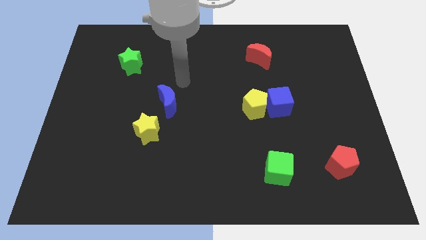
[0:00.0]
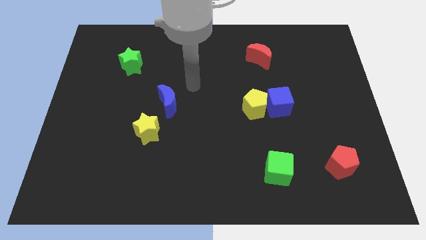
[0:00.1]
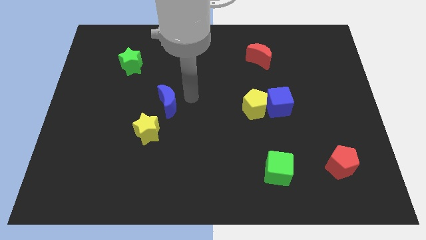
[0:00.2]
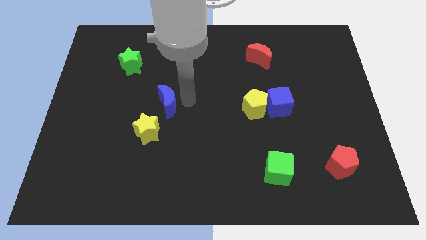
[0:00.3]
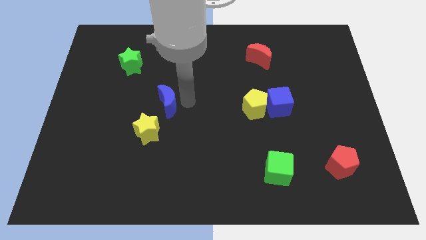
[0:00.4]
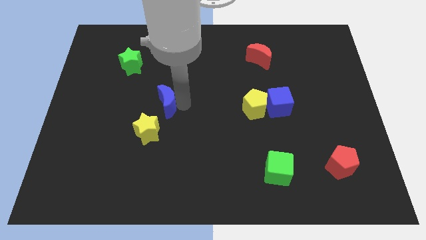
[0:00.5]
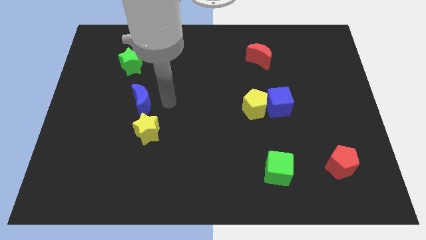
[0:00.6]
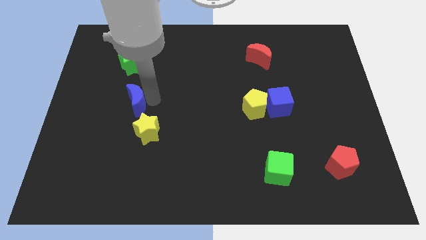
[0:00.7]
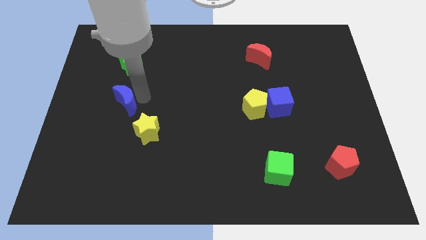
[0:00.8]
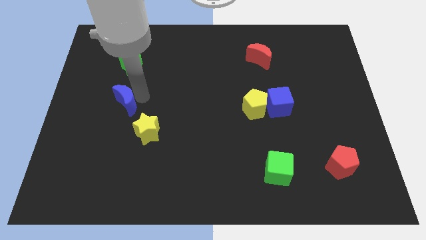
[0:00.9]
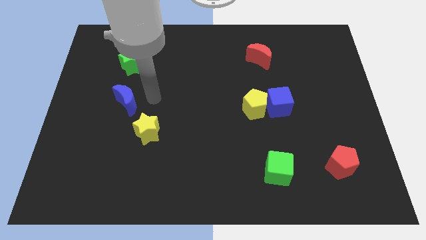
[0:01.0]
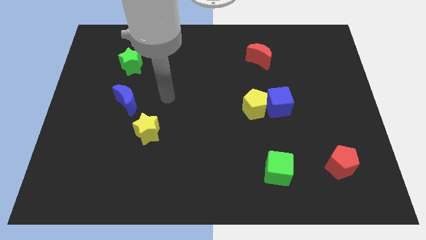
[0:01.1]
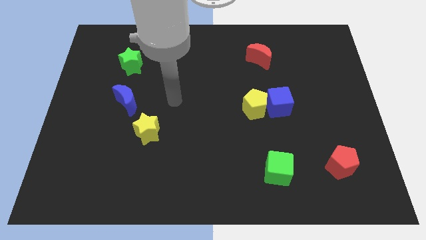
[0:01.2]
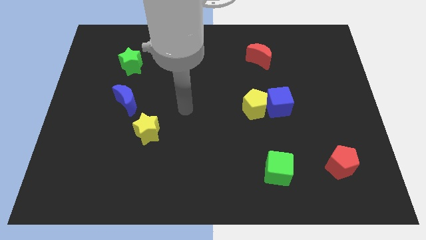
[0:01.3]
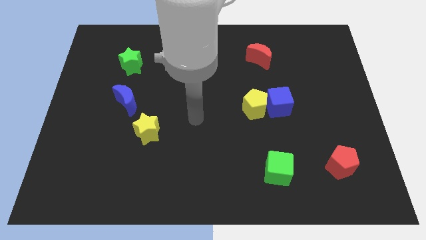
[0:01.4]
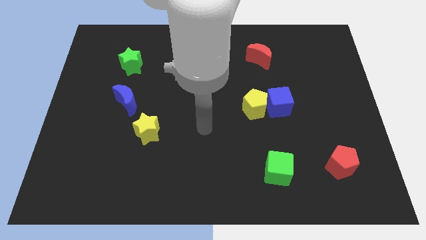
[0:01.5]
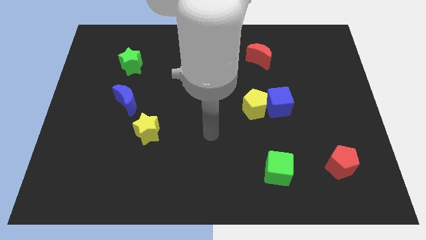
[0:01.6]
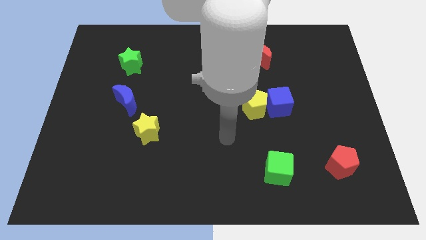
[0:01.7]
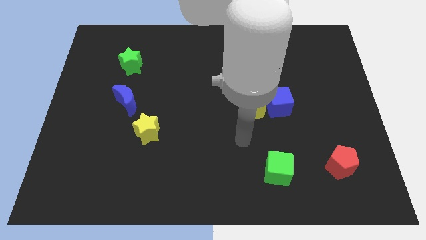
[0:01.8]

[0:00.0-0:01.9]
slightly push the blue moon towards the center left of the board

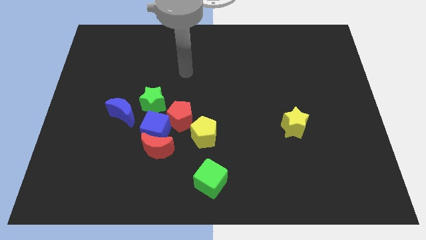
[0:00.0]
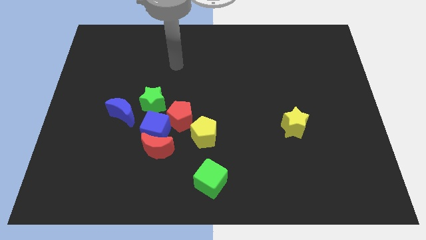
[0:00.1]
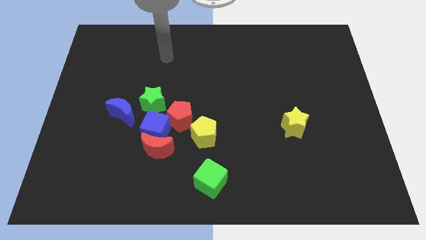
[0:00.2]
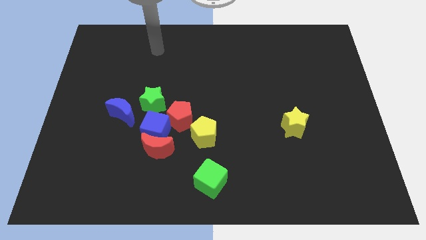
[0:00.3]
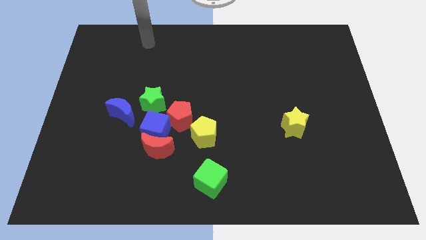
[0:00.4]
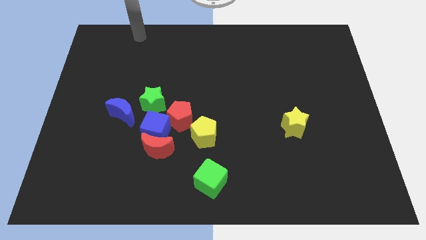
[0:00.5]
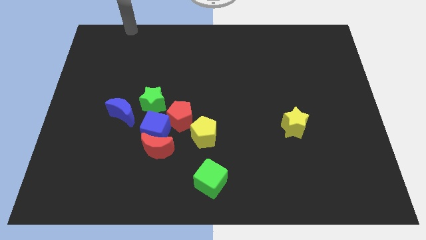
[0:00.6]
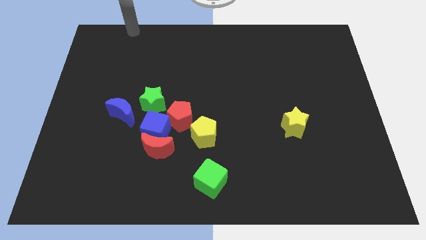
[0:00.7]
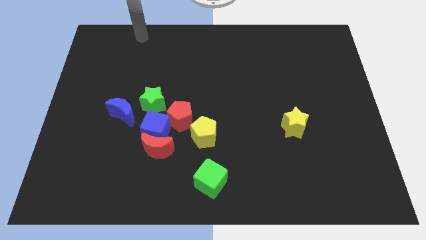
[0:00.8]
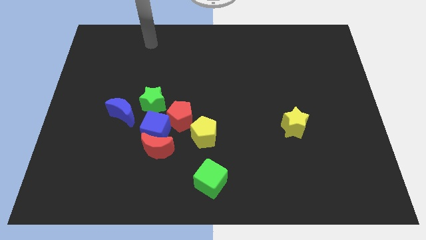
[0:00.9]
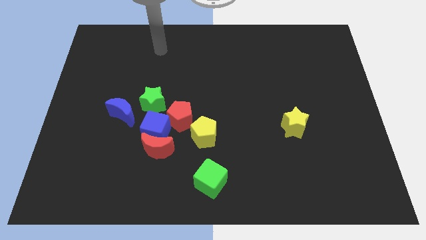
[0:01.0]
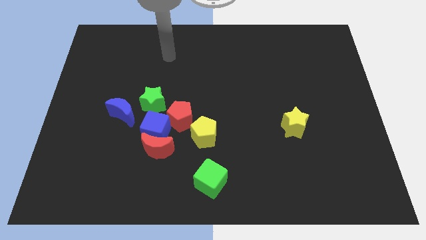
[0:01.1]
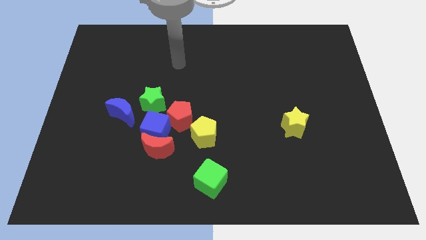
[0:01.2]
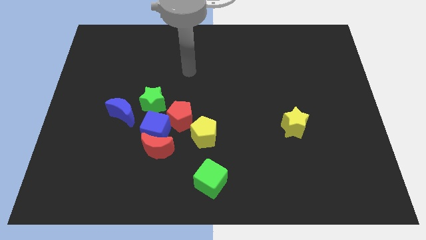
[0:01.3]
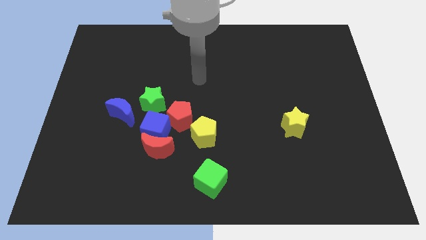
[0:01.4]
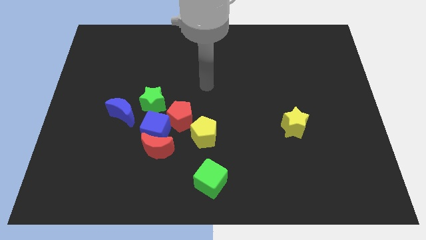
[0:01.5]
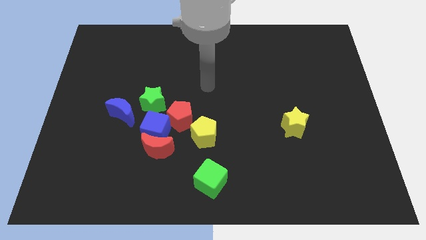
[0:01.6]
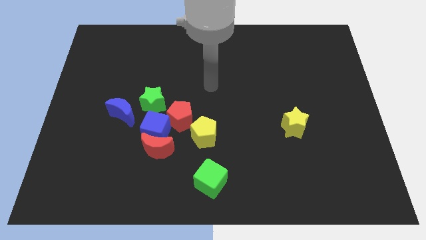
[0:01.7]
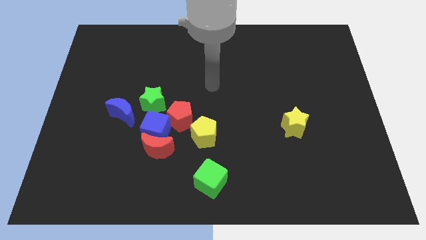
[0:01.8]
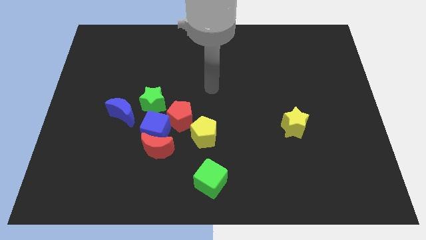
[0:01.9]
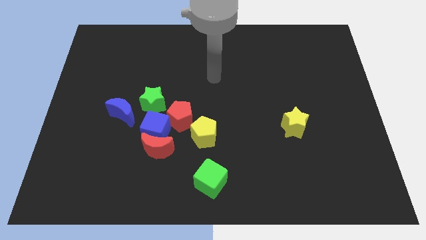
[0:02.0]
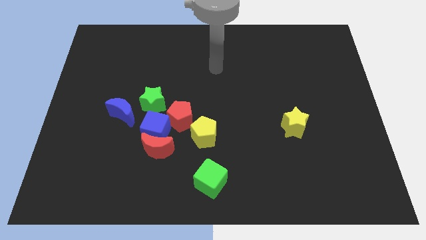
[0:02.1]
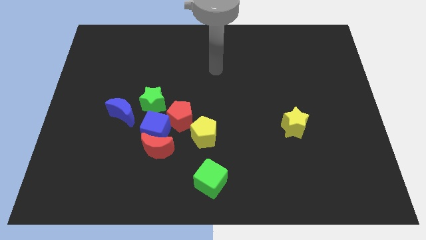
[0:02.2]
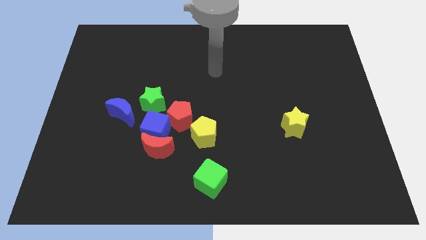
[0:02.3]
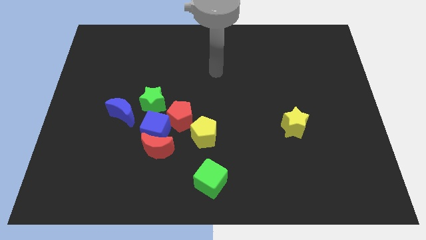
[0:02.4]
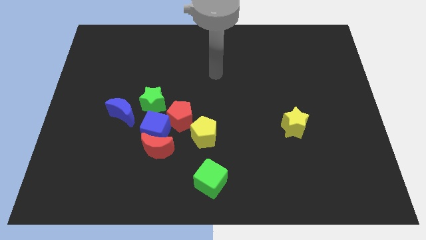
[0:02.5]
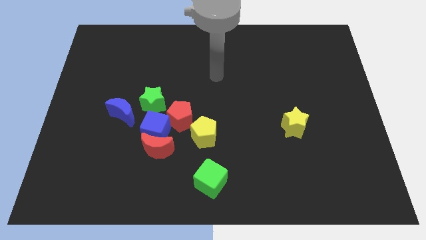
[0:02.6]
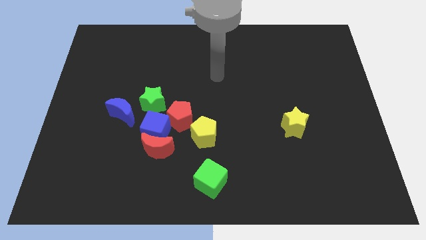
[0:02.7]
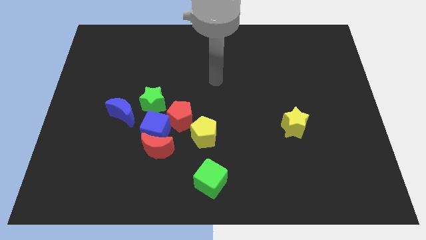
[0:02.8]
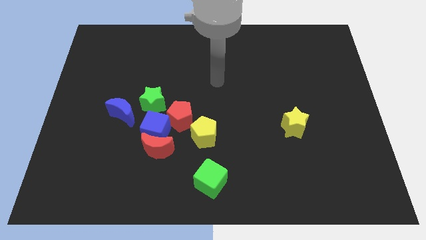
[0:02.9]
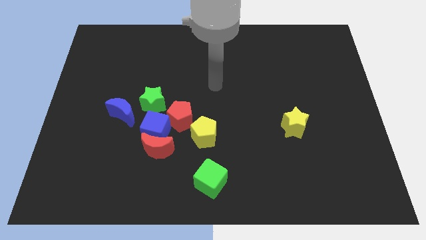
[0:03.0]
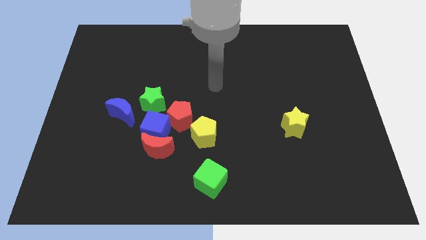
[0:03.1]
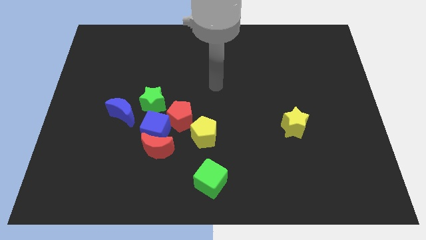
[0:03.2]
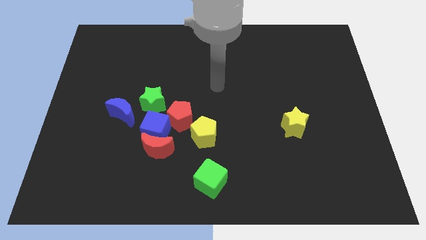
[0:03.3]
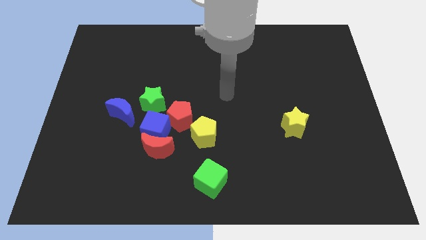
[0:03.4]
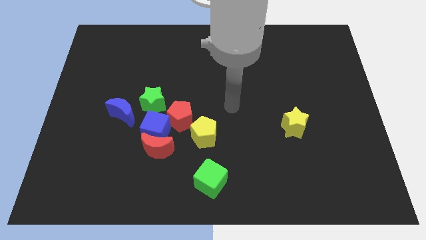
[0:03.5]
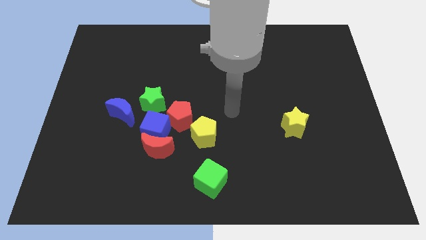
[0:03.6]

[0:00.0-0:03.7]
point the arm at the center of the board

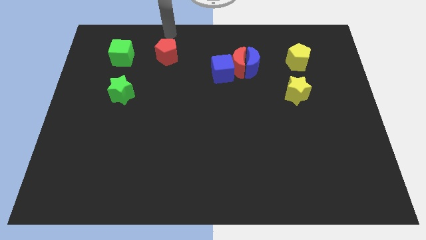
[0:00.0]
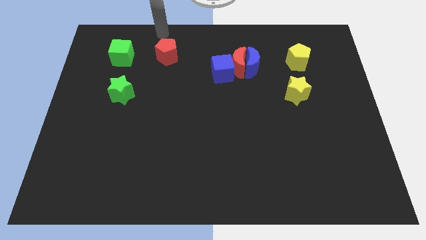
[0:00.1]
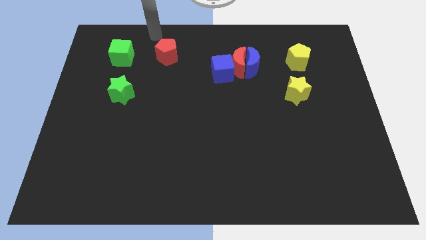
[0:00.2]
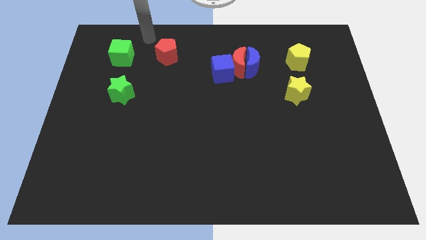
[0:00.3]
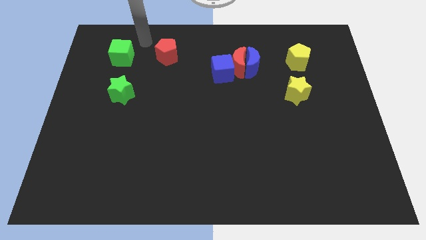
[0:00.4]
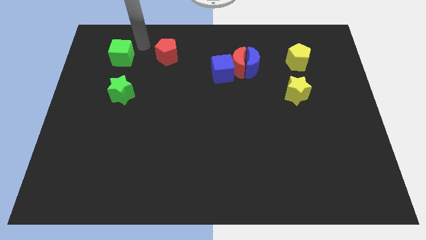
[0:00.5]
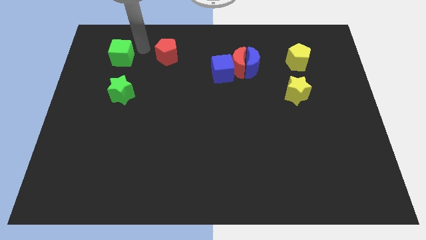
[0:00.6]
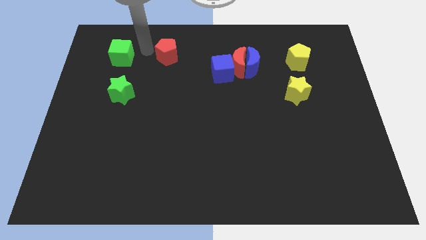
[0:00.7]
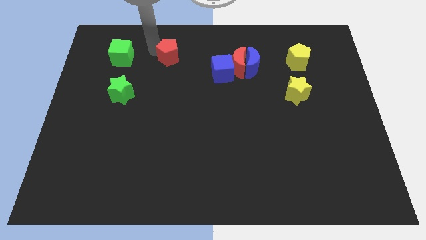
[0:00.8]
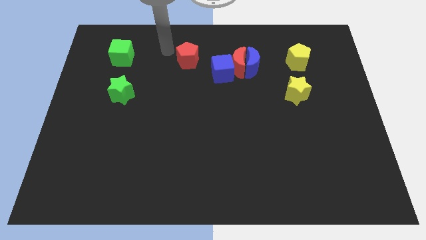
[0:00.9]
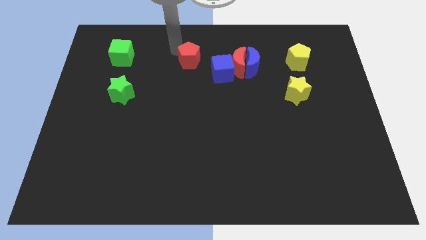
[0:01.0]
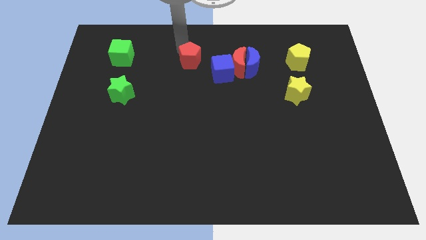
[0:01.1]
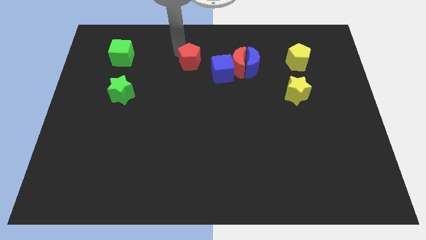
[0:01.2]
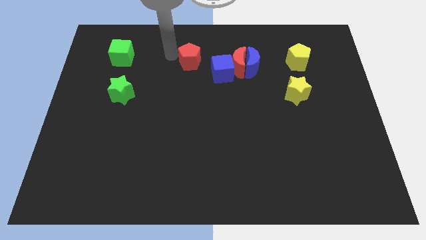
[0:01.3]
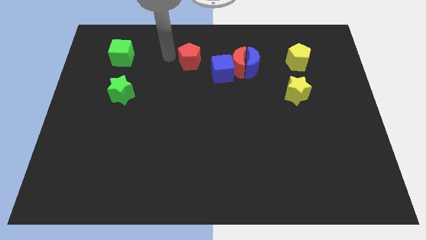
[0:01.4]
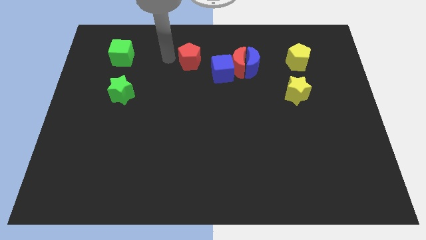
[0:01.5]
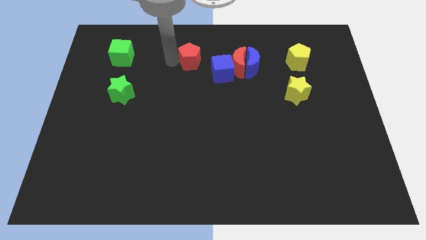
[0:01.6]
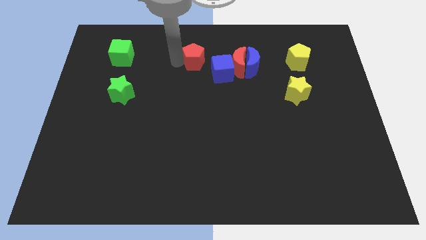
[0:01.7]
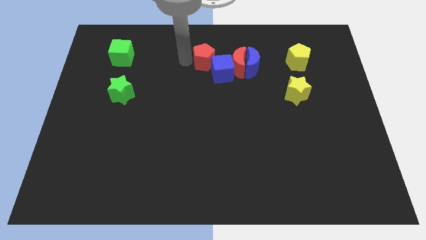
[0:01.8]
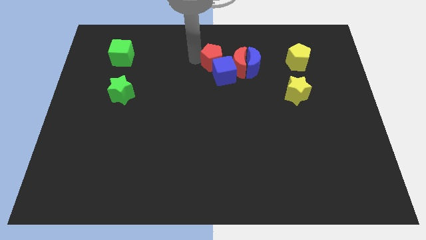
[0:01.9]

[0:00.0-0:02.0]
place the red pentagon towards the top left of the blue cube

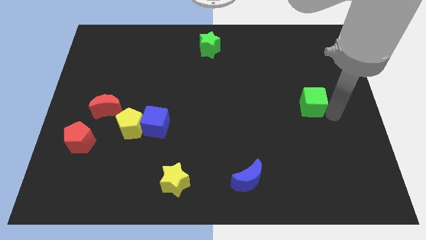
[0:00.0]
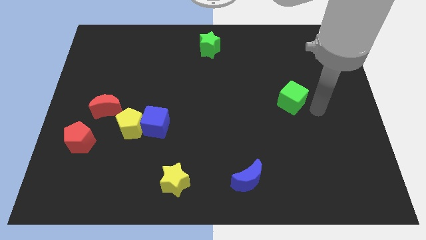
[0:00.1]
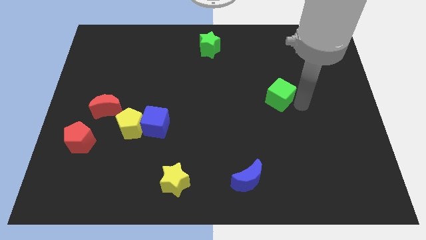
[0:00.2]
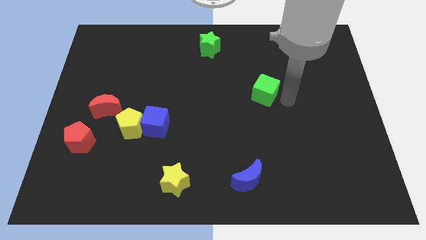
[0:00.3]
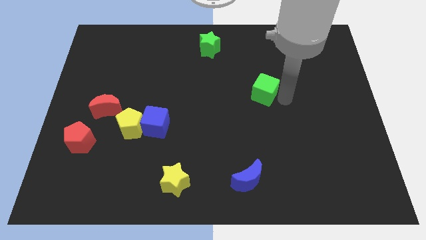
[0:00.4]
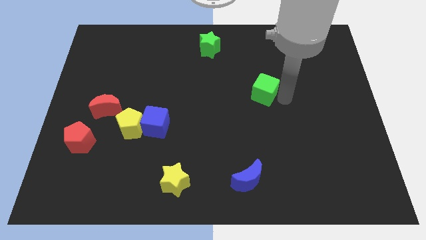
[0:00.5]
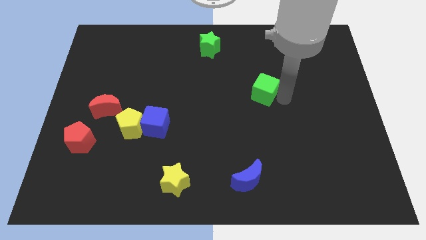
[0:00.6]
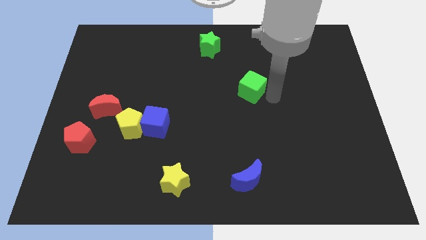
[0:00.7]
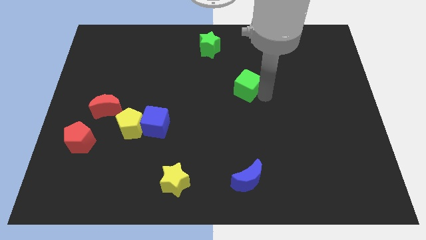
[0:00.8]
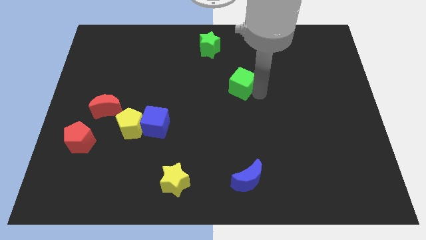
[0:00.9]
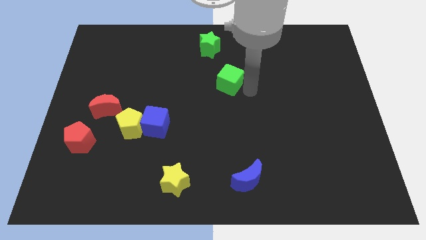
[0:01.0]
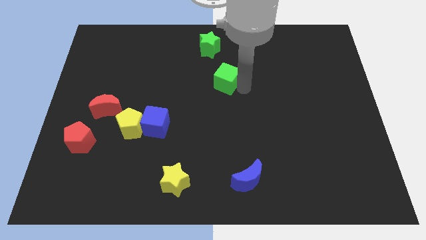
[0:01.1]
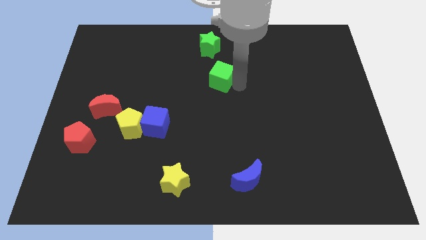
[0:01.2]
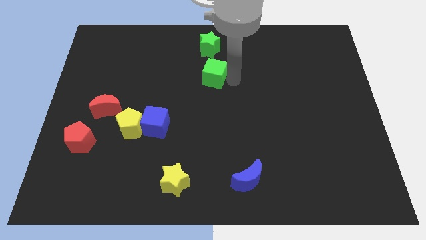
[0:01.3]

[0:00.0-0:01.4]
push the green cube slightly to the left
